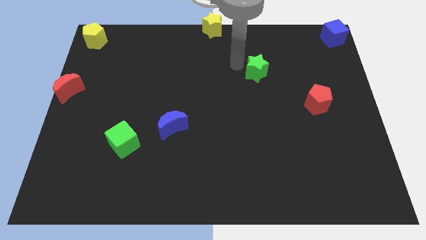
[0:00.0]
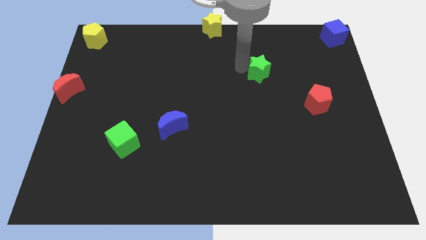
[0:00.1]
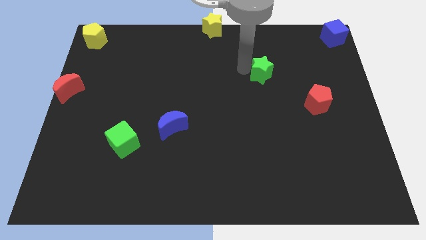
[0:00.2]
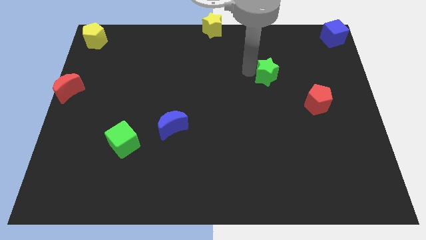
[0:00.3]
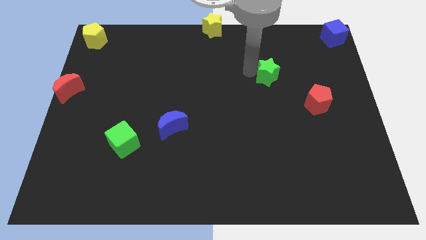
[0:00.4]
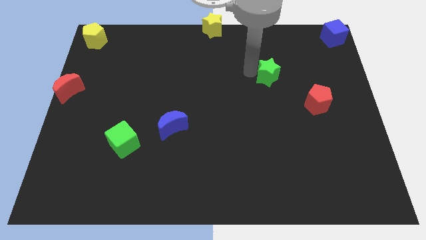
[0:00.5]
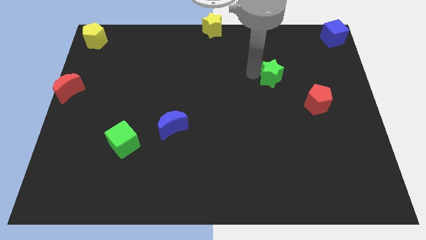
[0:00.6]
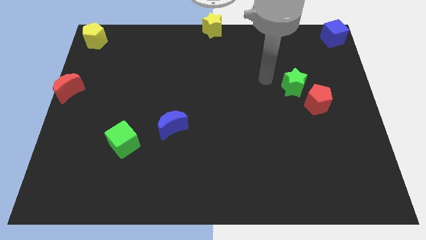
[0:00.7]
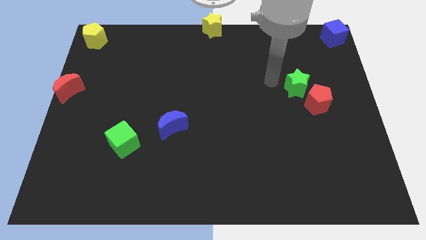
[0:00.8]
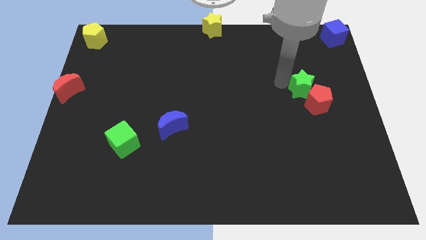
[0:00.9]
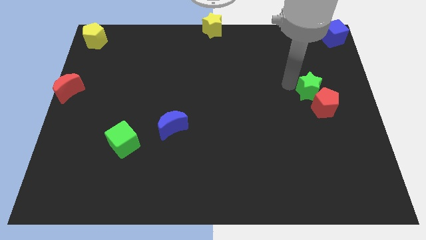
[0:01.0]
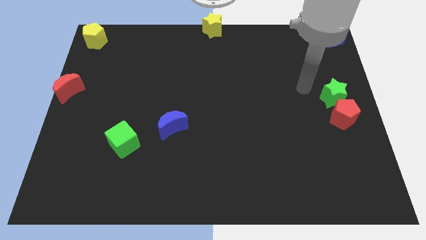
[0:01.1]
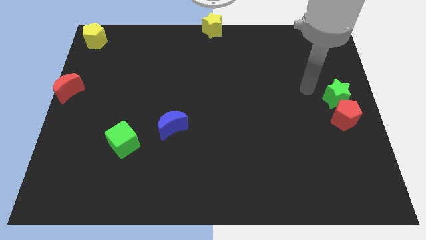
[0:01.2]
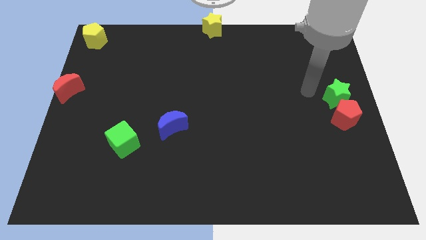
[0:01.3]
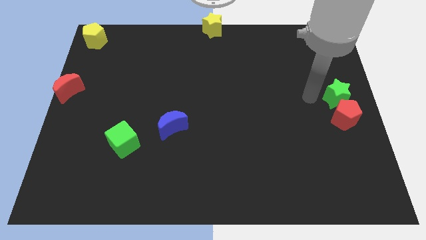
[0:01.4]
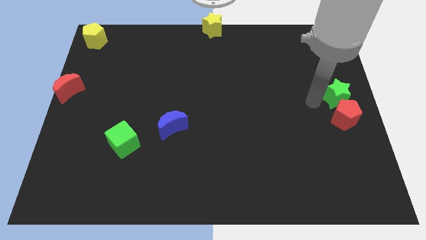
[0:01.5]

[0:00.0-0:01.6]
push the red pentagon with the green star to the right center of the board

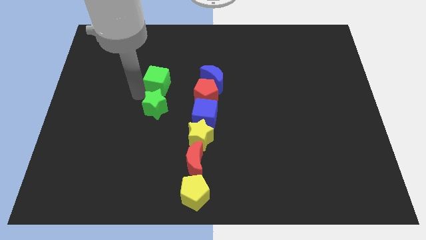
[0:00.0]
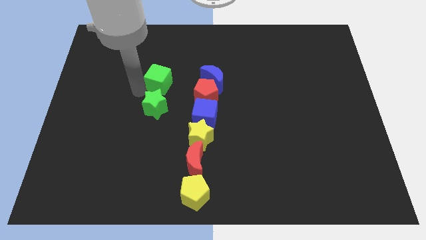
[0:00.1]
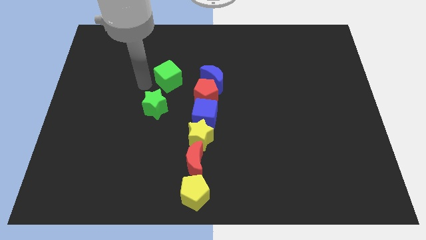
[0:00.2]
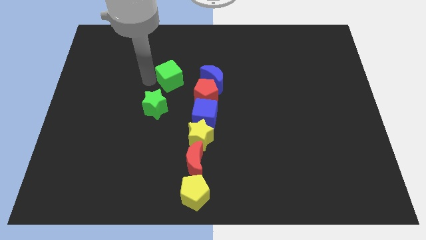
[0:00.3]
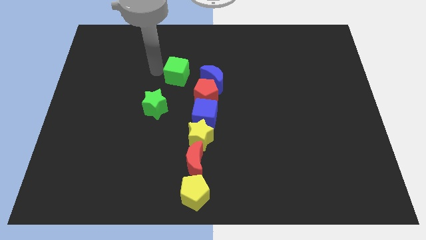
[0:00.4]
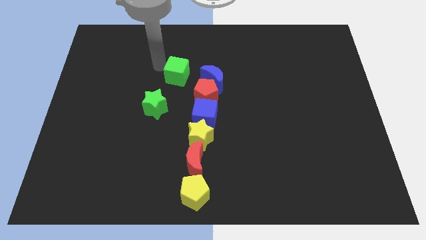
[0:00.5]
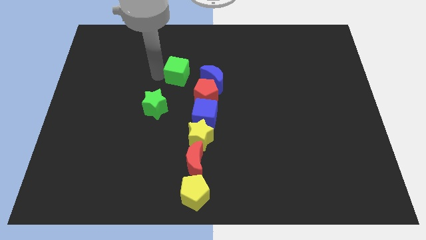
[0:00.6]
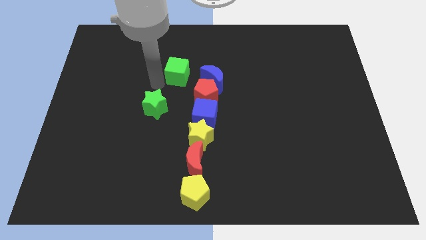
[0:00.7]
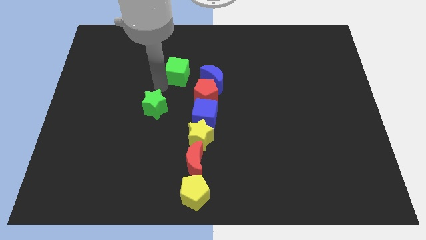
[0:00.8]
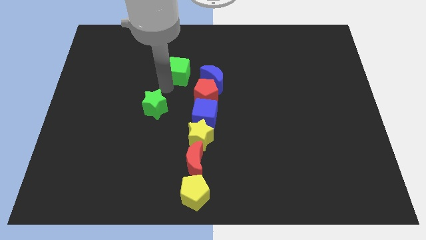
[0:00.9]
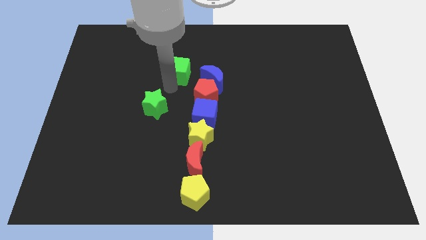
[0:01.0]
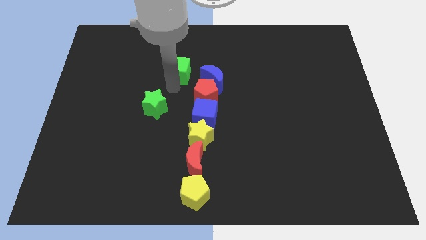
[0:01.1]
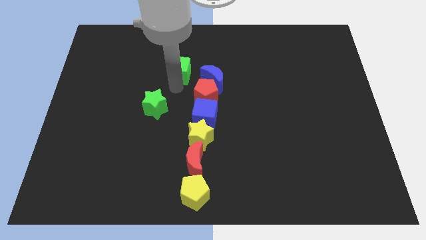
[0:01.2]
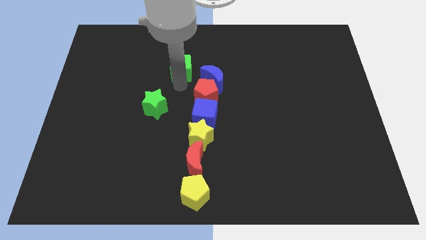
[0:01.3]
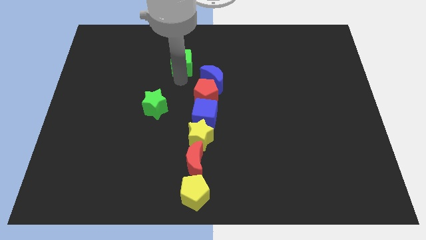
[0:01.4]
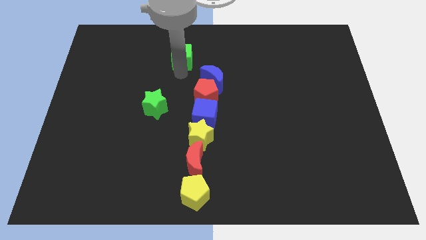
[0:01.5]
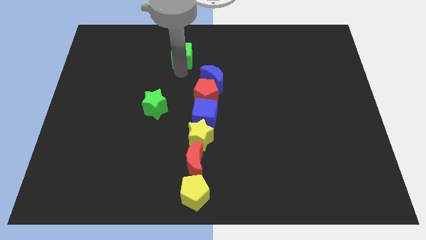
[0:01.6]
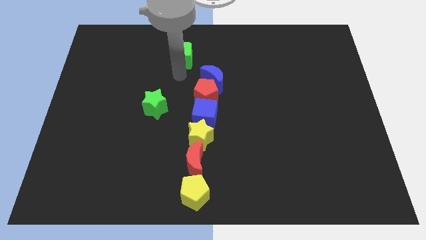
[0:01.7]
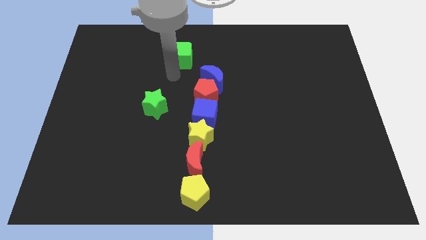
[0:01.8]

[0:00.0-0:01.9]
push the green cube to the top of the board

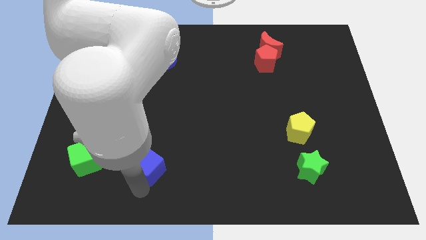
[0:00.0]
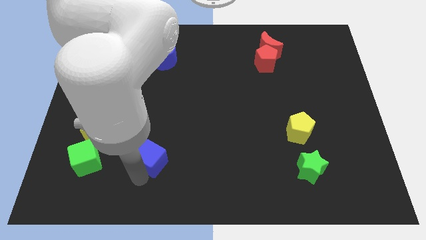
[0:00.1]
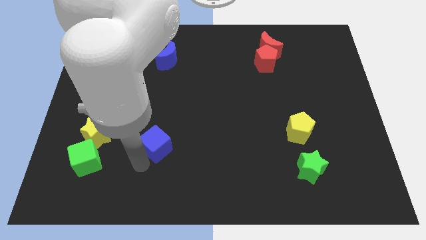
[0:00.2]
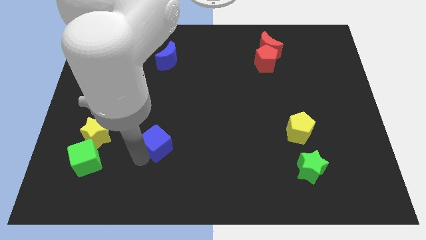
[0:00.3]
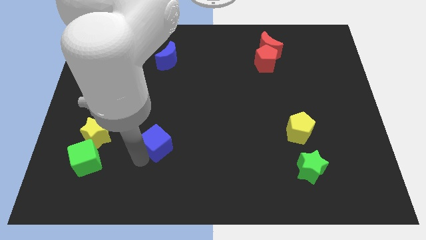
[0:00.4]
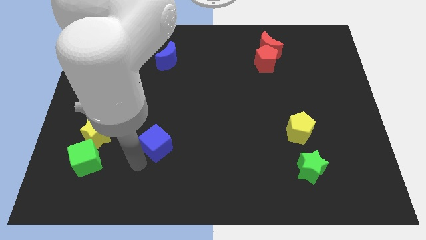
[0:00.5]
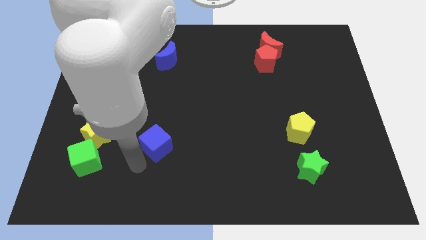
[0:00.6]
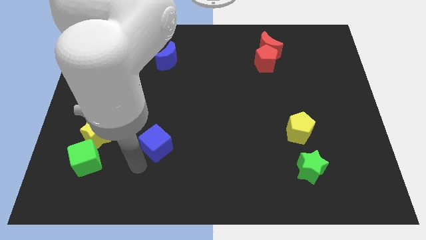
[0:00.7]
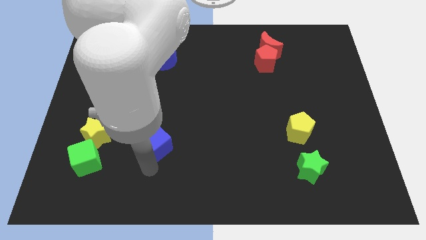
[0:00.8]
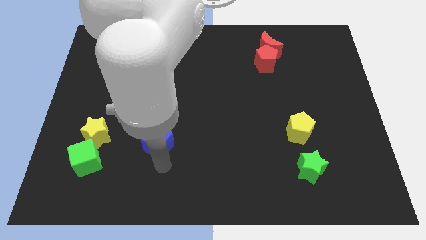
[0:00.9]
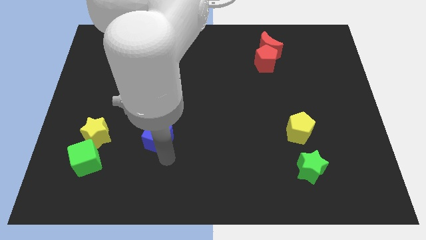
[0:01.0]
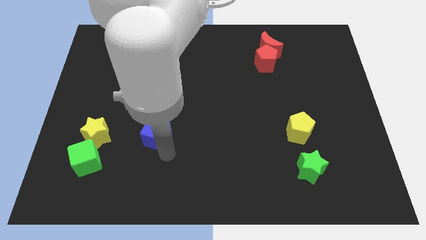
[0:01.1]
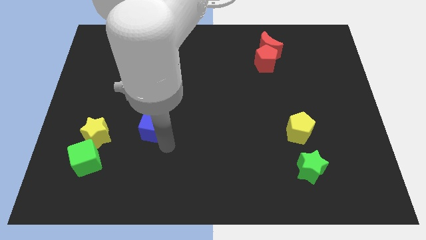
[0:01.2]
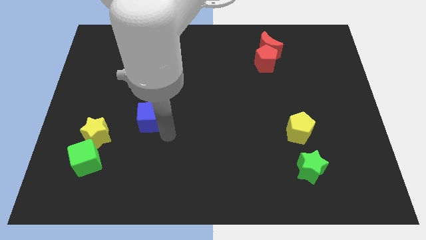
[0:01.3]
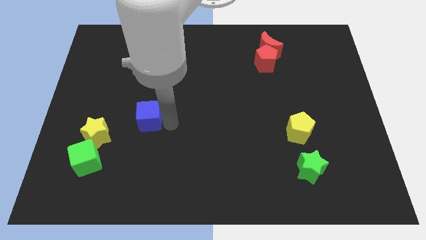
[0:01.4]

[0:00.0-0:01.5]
move the blue cube diagonally on the top right side of the yellow star

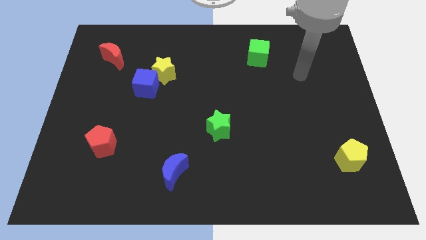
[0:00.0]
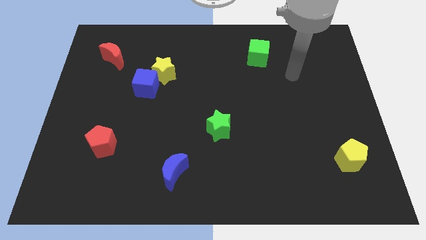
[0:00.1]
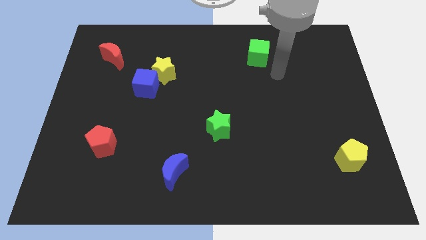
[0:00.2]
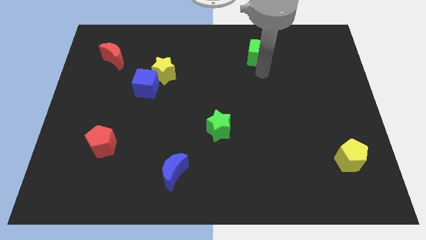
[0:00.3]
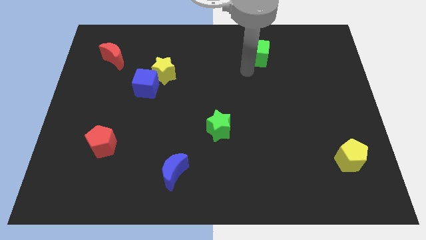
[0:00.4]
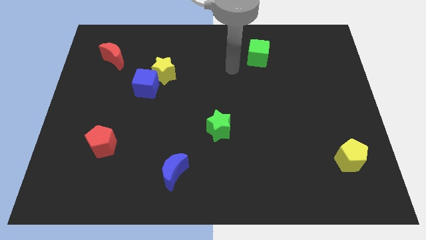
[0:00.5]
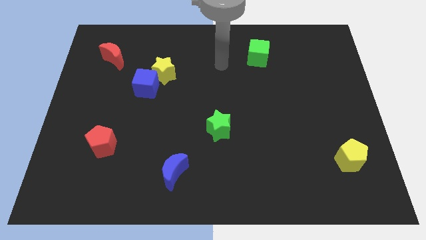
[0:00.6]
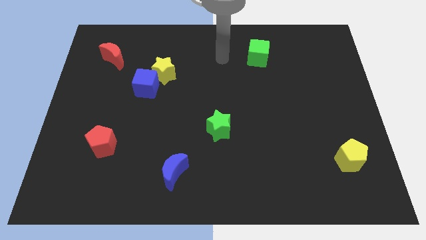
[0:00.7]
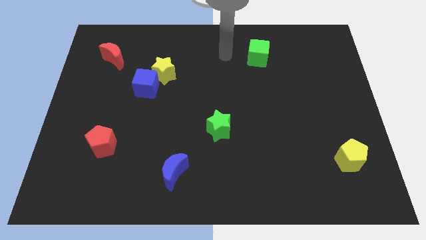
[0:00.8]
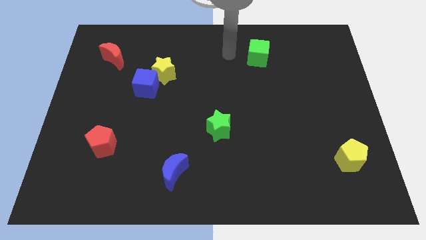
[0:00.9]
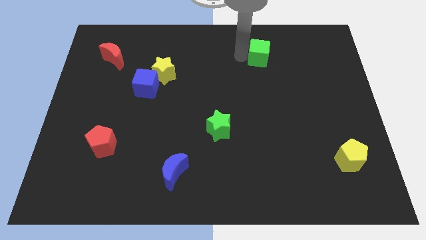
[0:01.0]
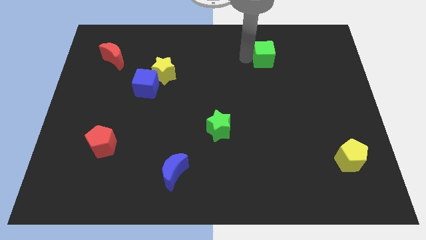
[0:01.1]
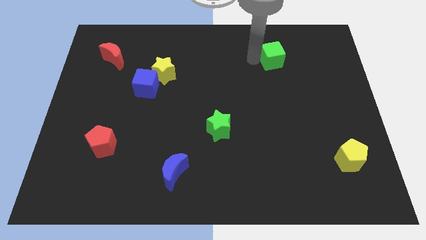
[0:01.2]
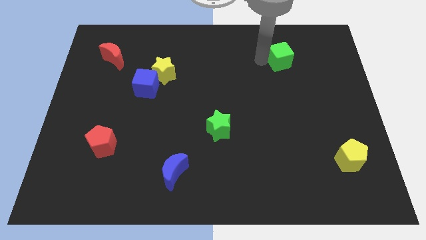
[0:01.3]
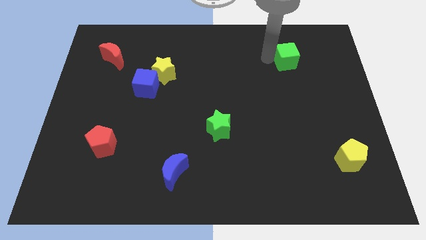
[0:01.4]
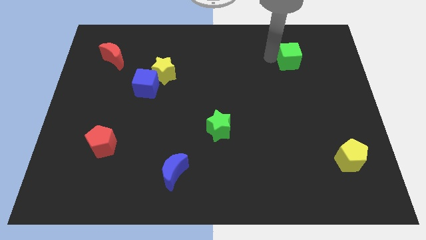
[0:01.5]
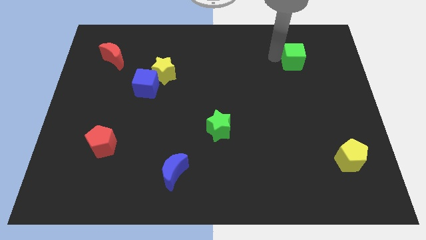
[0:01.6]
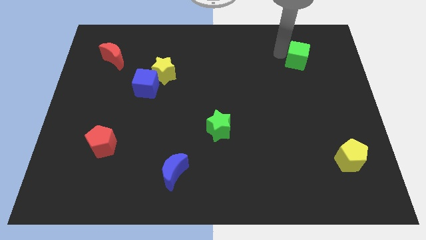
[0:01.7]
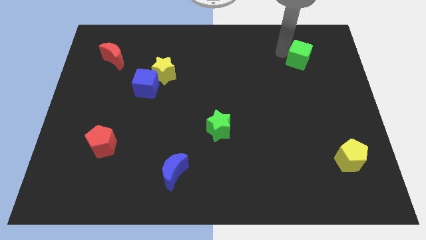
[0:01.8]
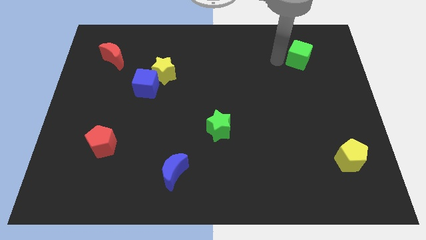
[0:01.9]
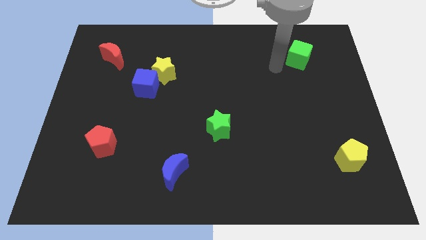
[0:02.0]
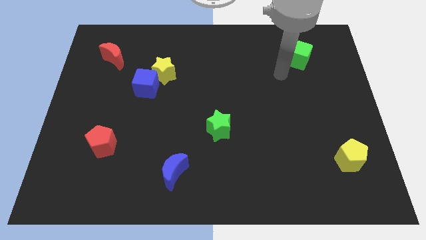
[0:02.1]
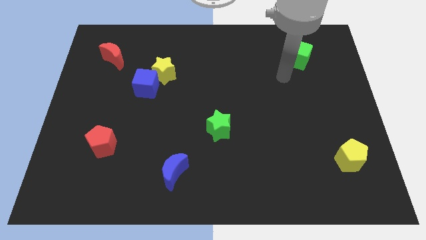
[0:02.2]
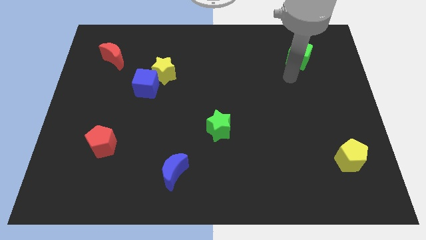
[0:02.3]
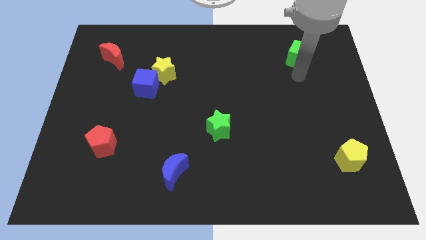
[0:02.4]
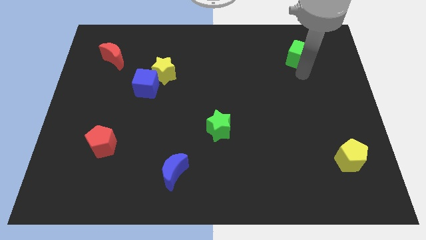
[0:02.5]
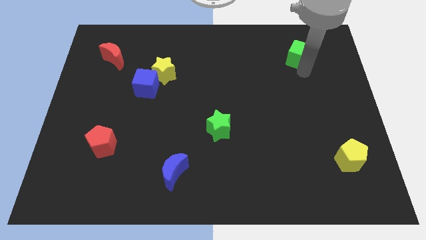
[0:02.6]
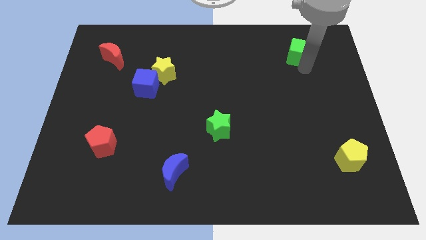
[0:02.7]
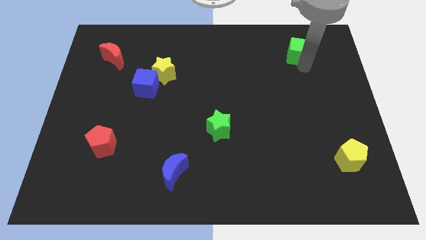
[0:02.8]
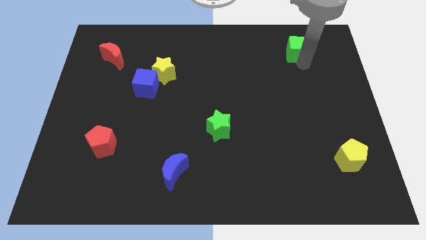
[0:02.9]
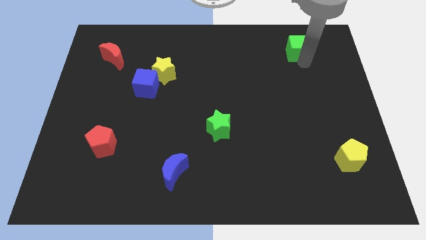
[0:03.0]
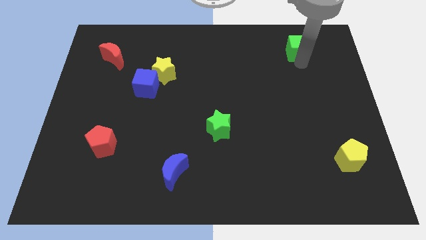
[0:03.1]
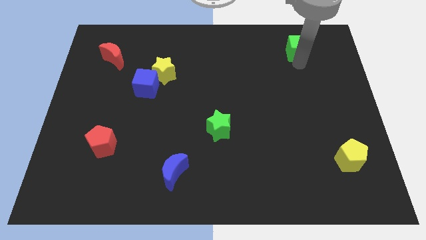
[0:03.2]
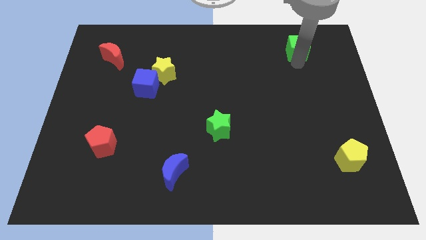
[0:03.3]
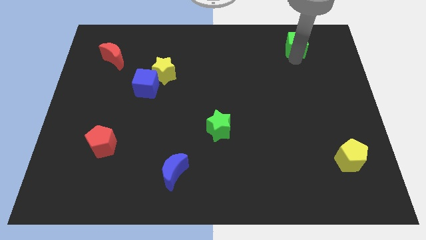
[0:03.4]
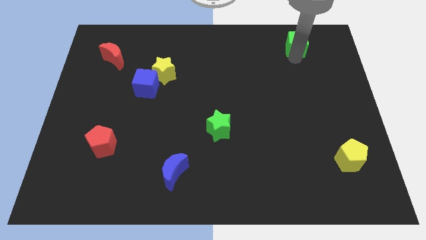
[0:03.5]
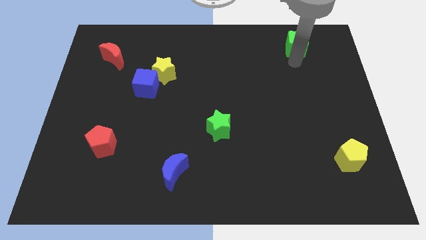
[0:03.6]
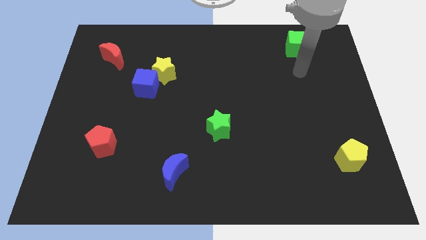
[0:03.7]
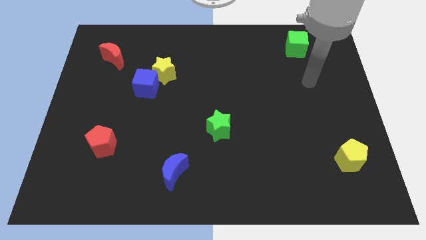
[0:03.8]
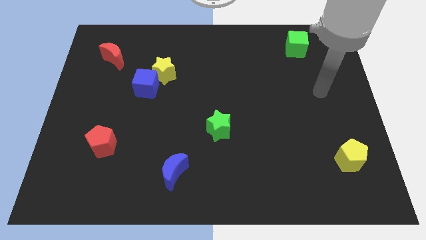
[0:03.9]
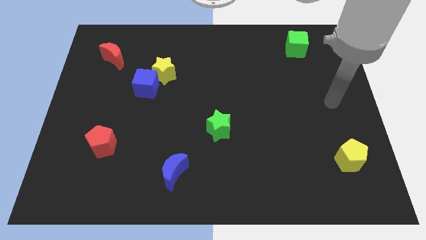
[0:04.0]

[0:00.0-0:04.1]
move the green cube towards top right side of the board
